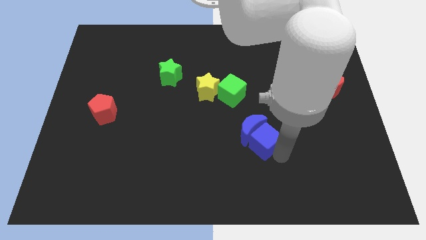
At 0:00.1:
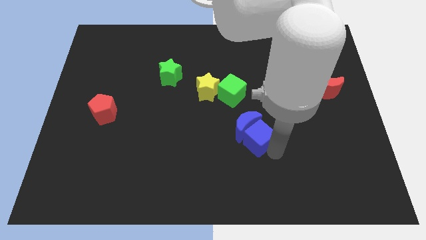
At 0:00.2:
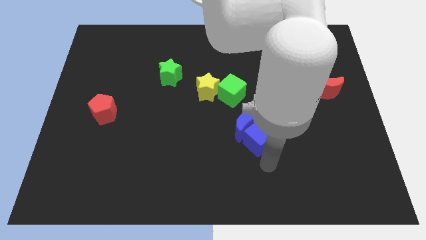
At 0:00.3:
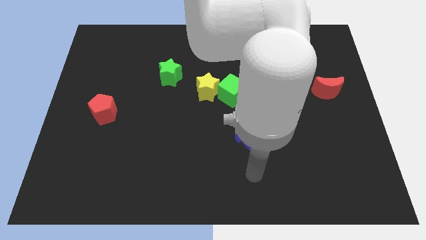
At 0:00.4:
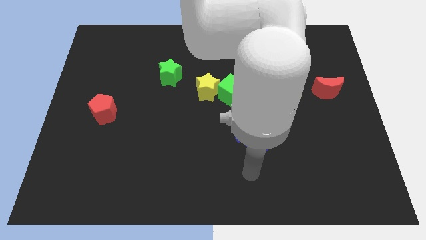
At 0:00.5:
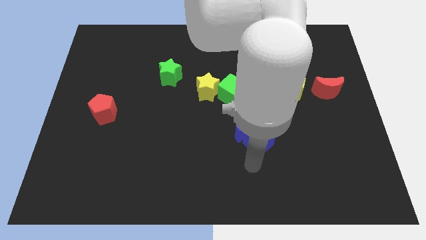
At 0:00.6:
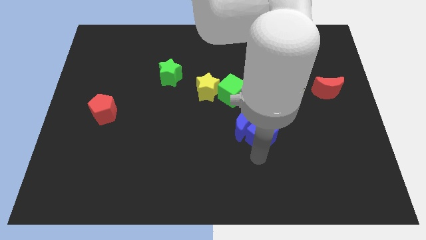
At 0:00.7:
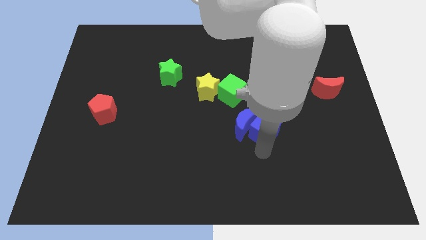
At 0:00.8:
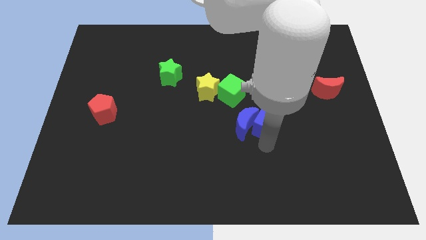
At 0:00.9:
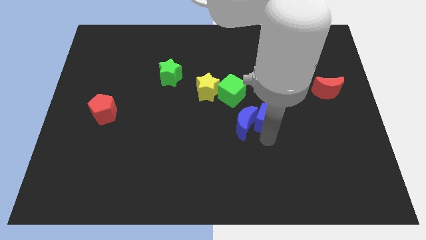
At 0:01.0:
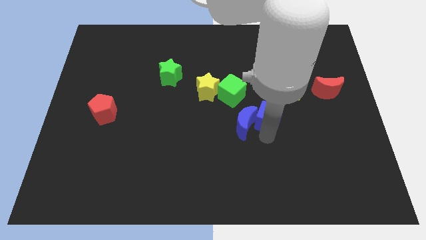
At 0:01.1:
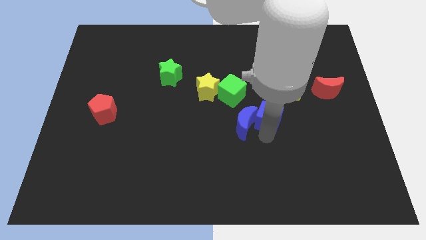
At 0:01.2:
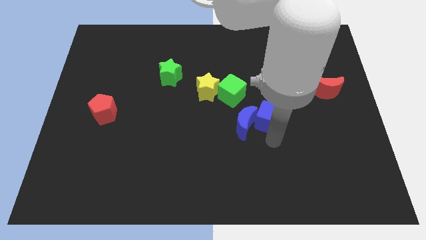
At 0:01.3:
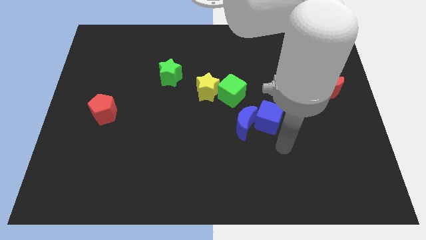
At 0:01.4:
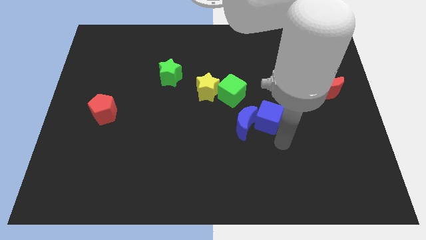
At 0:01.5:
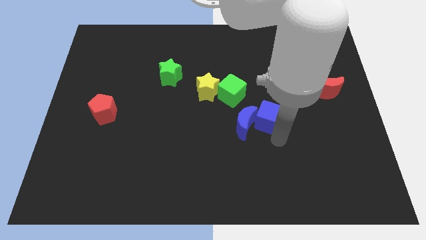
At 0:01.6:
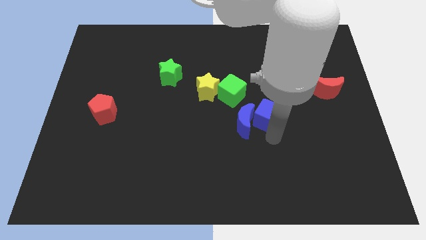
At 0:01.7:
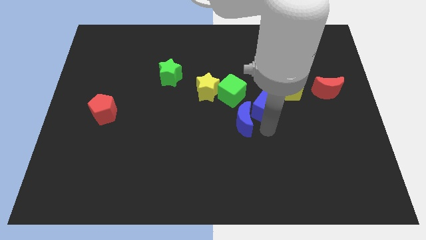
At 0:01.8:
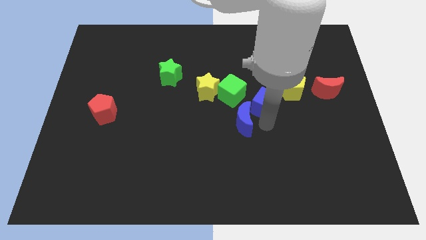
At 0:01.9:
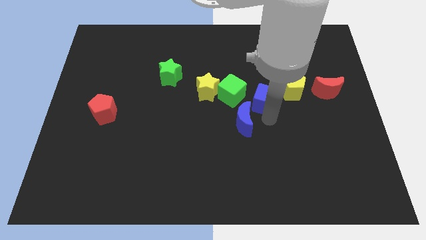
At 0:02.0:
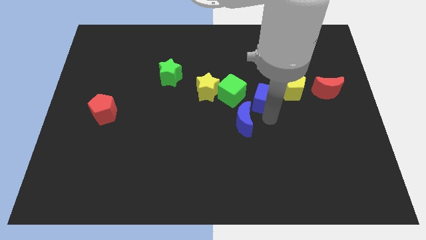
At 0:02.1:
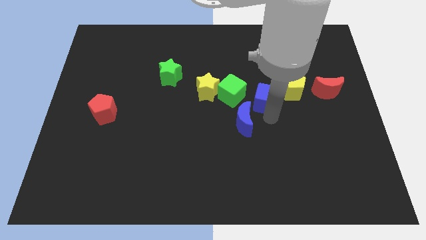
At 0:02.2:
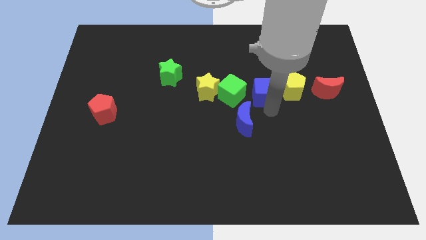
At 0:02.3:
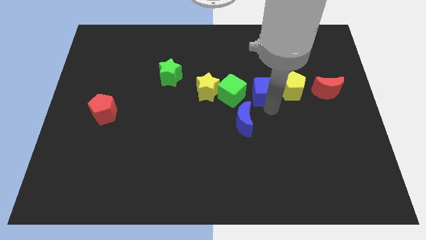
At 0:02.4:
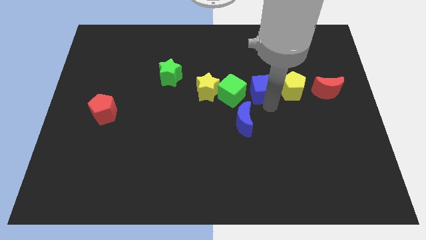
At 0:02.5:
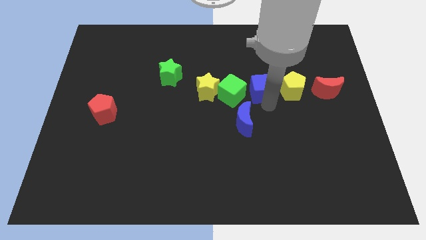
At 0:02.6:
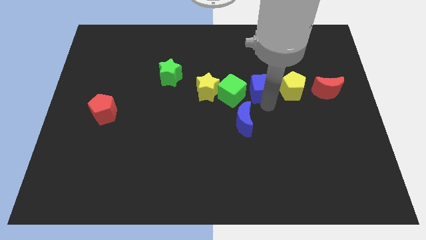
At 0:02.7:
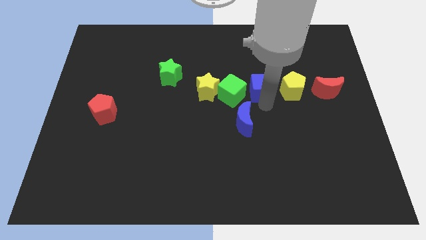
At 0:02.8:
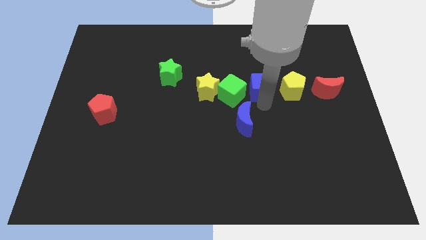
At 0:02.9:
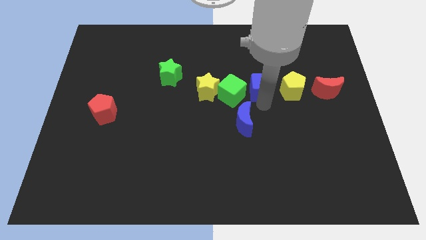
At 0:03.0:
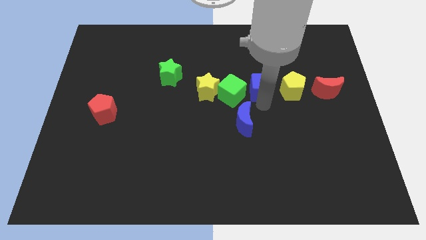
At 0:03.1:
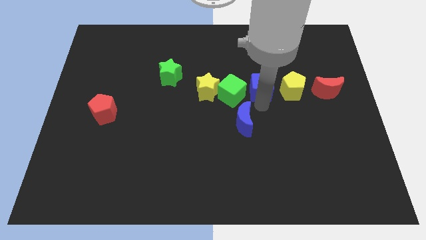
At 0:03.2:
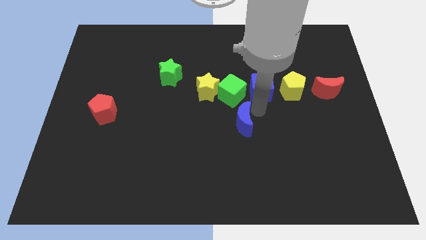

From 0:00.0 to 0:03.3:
move the blue cube to the right of the green cube

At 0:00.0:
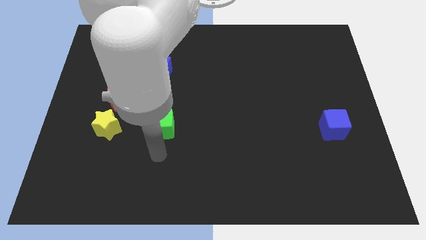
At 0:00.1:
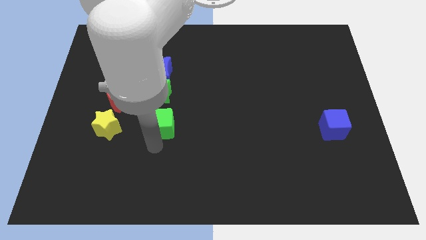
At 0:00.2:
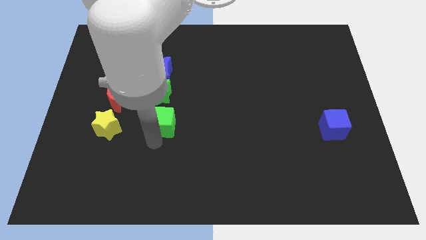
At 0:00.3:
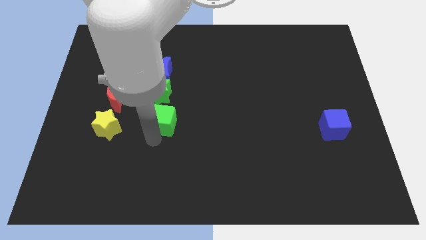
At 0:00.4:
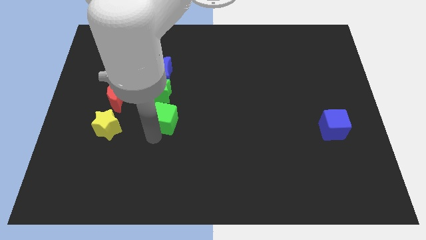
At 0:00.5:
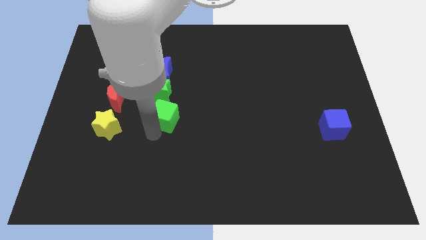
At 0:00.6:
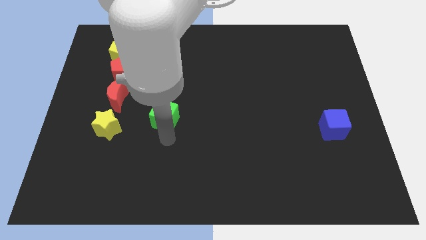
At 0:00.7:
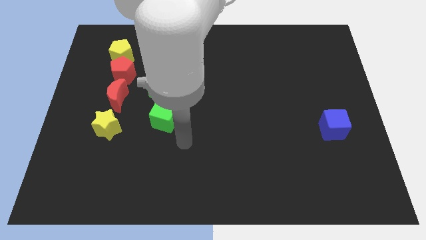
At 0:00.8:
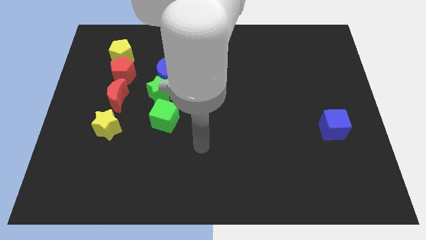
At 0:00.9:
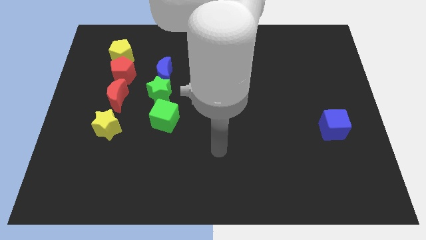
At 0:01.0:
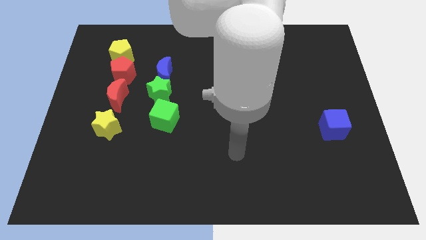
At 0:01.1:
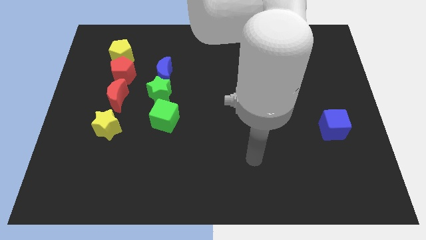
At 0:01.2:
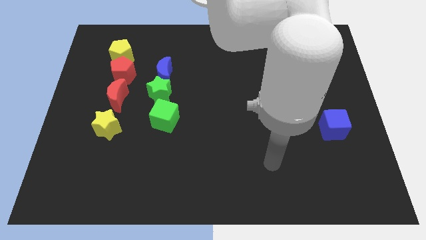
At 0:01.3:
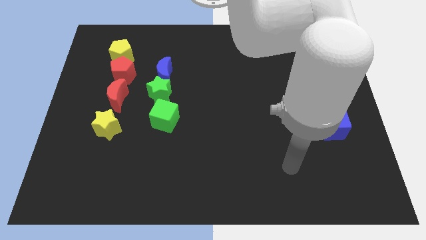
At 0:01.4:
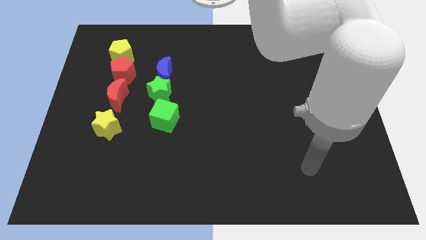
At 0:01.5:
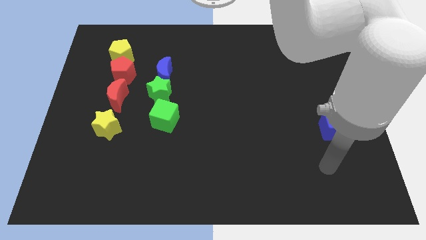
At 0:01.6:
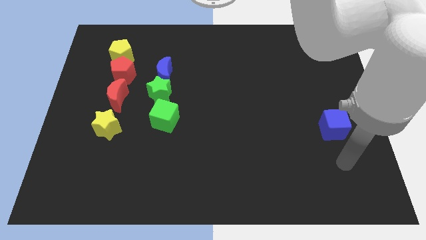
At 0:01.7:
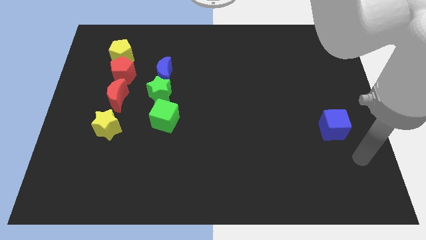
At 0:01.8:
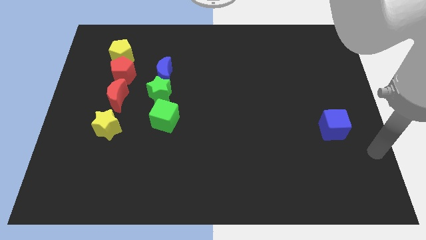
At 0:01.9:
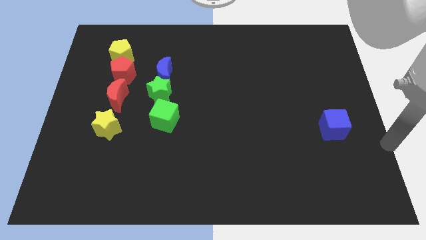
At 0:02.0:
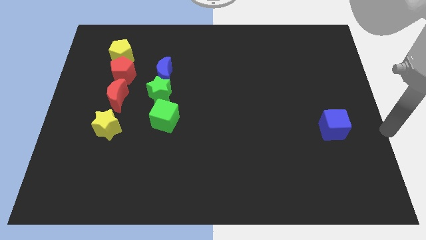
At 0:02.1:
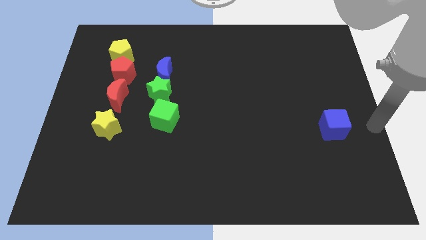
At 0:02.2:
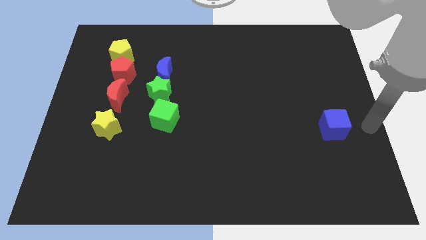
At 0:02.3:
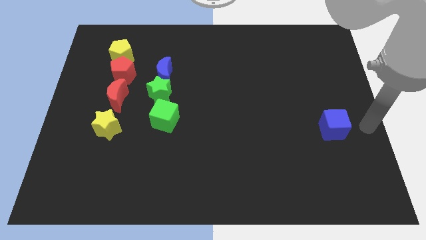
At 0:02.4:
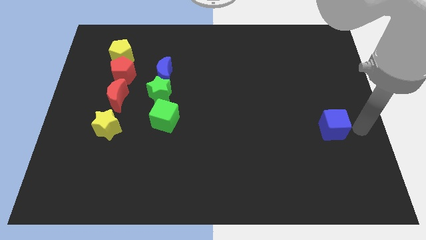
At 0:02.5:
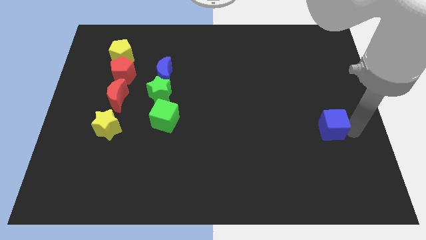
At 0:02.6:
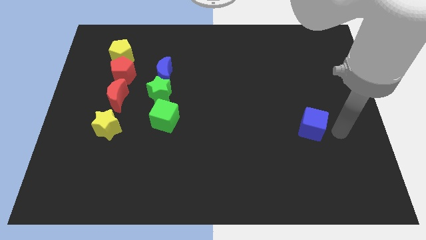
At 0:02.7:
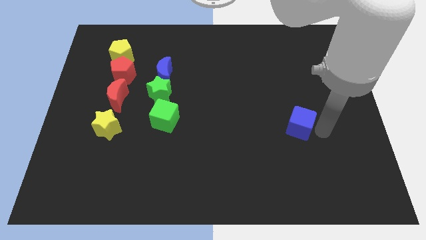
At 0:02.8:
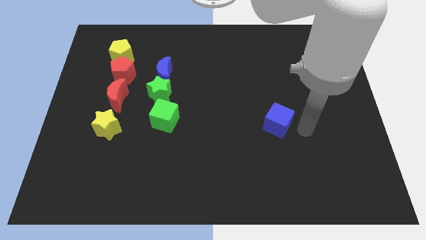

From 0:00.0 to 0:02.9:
move arm near blue cube

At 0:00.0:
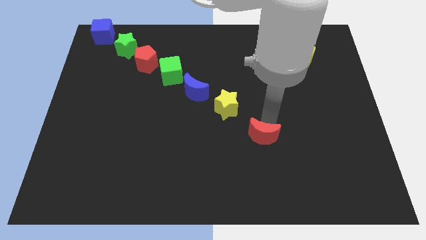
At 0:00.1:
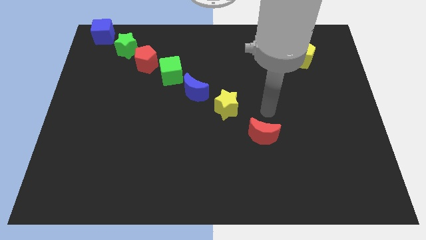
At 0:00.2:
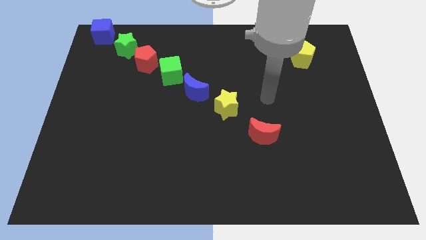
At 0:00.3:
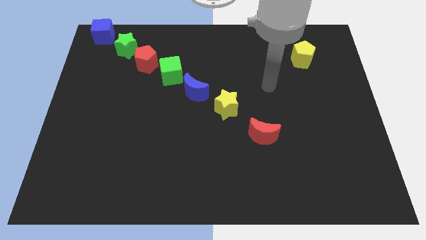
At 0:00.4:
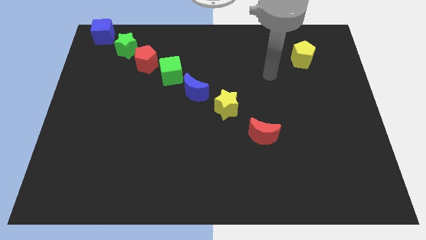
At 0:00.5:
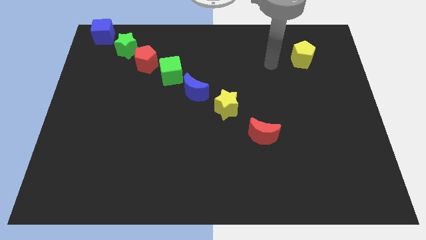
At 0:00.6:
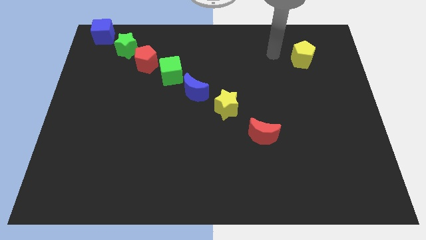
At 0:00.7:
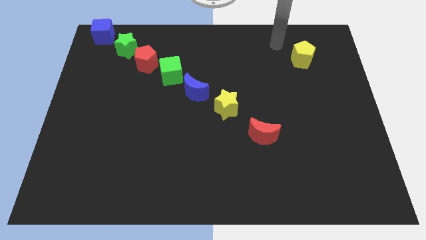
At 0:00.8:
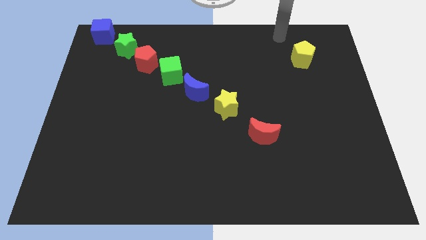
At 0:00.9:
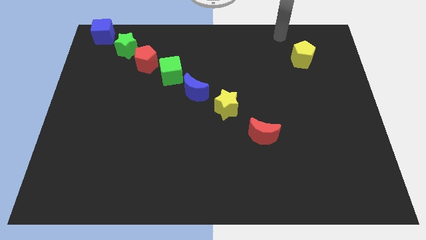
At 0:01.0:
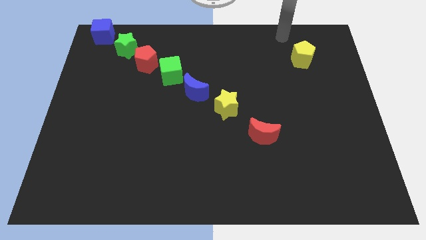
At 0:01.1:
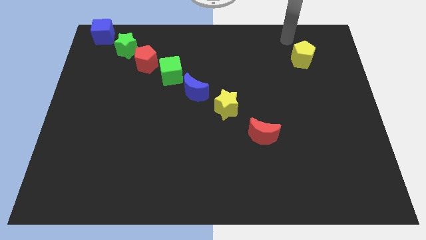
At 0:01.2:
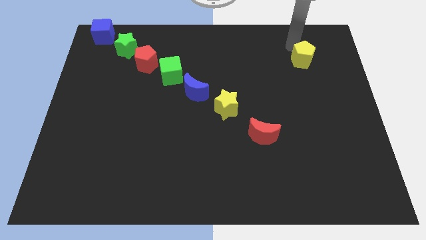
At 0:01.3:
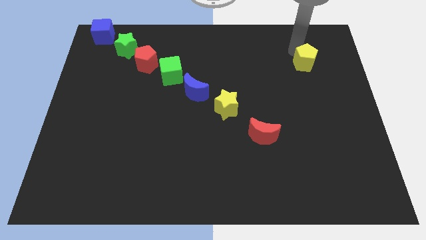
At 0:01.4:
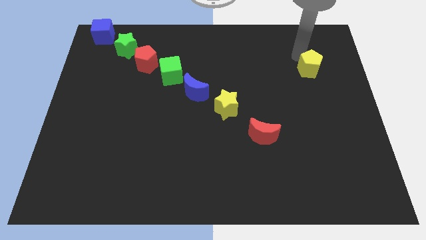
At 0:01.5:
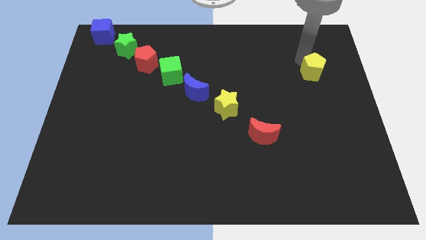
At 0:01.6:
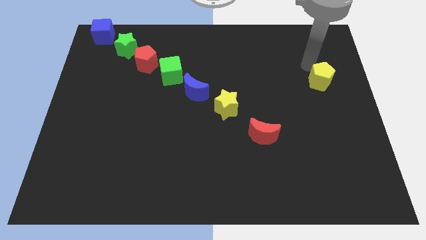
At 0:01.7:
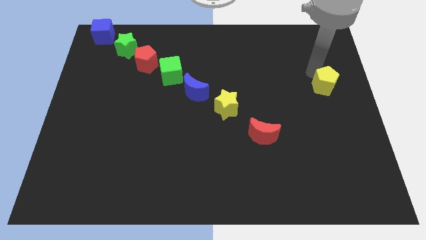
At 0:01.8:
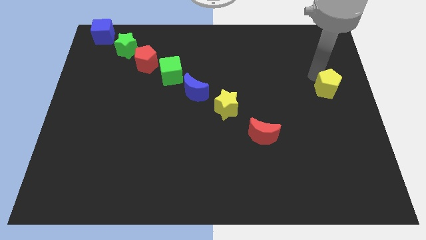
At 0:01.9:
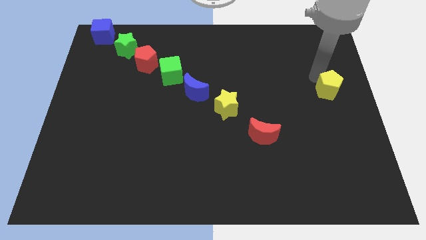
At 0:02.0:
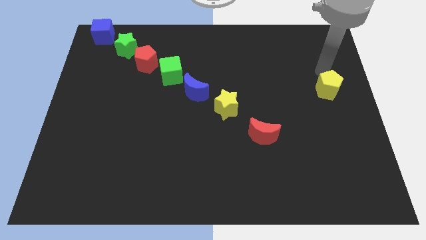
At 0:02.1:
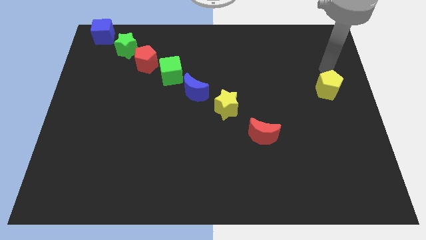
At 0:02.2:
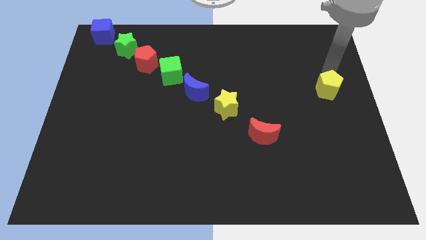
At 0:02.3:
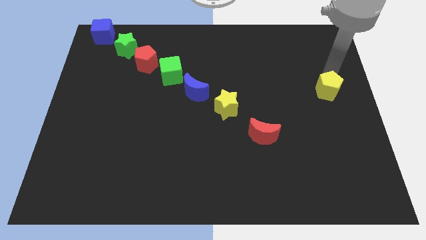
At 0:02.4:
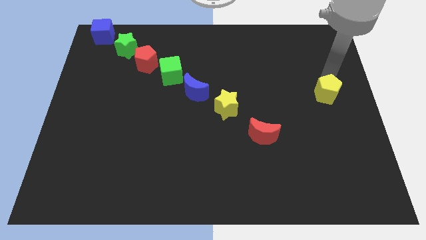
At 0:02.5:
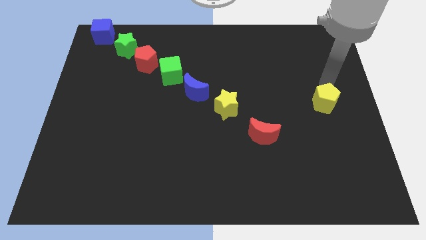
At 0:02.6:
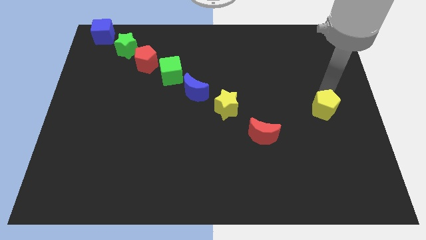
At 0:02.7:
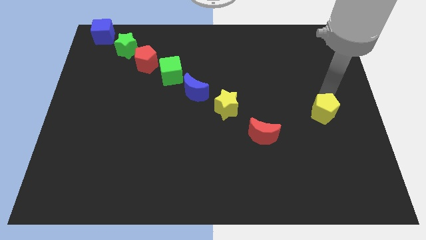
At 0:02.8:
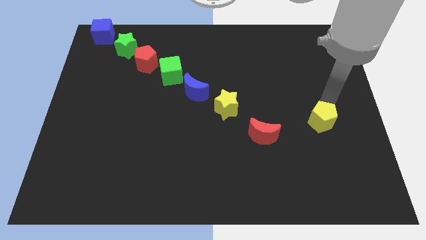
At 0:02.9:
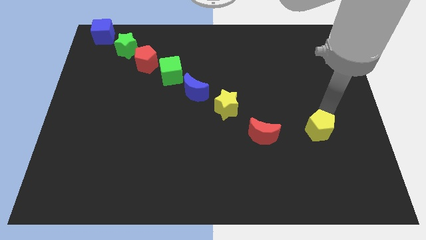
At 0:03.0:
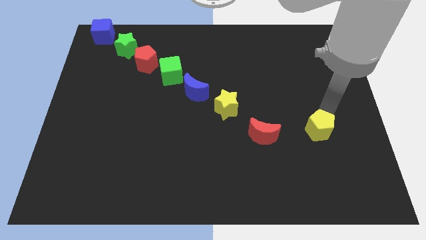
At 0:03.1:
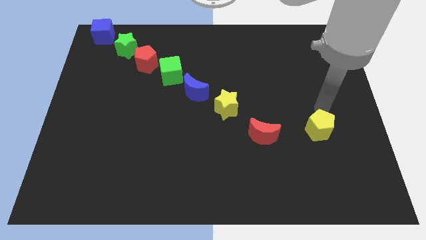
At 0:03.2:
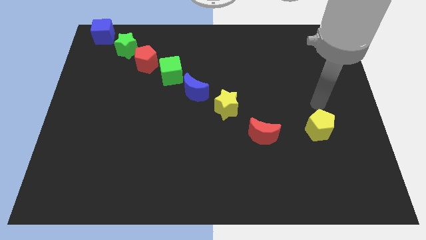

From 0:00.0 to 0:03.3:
place the yellow pentagon parallel to red crescent
